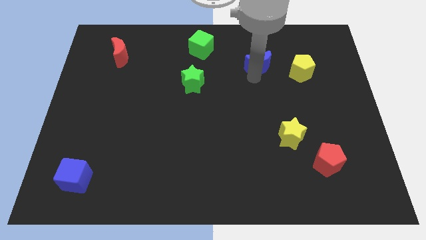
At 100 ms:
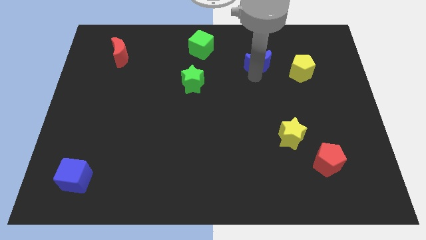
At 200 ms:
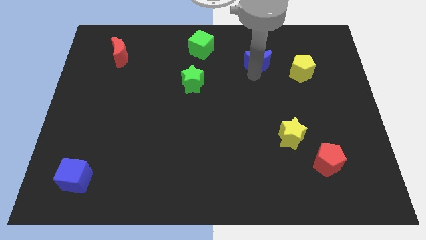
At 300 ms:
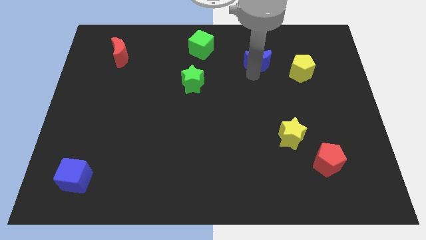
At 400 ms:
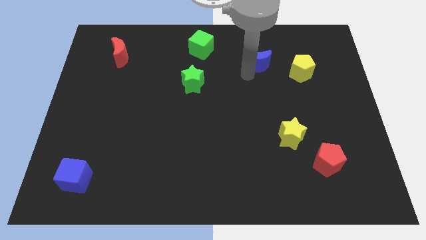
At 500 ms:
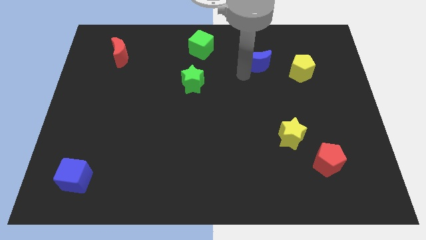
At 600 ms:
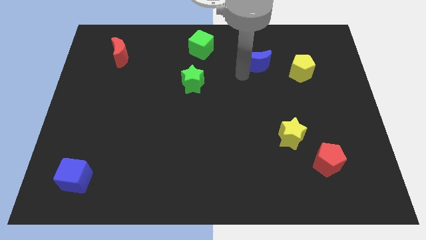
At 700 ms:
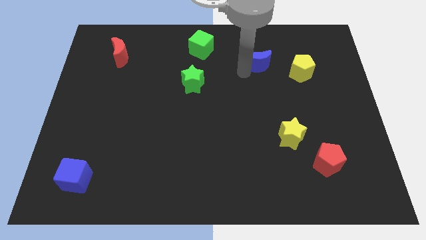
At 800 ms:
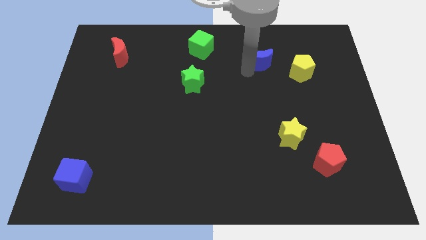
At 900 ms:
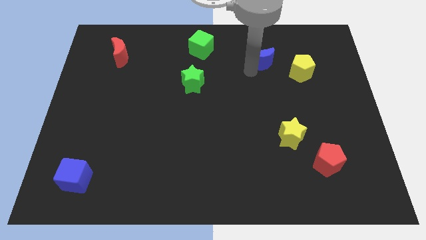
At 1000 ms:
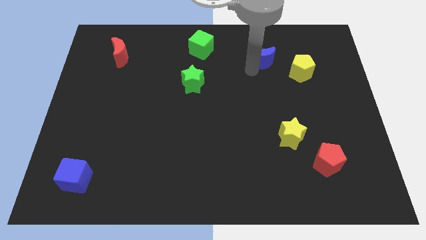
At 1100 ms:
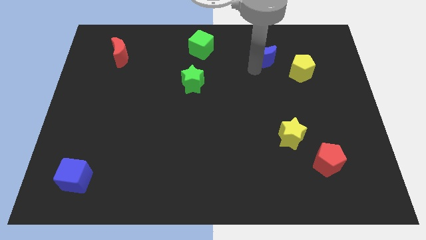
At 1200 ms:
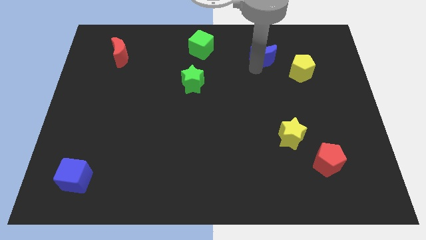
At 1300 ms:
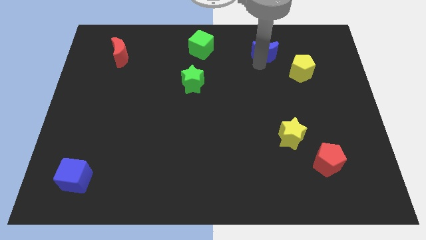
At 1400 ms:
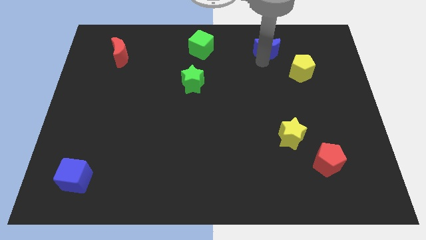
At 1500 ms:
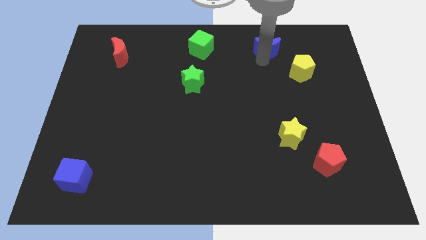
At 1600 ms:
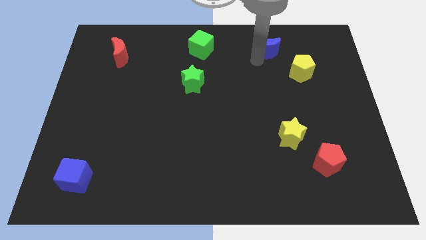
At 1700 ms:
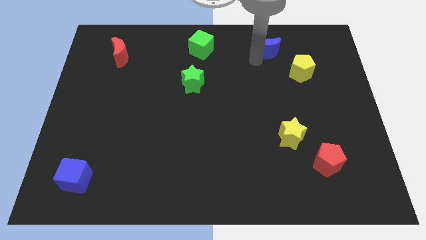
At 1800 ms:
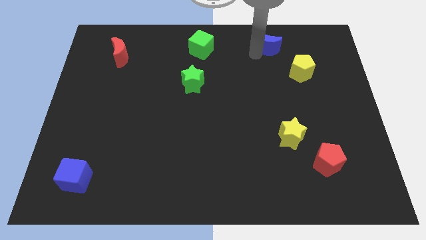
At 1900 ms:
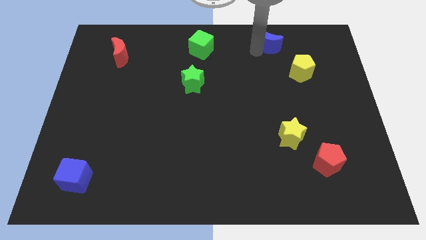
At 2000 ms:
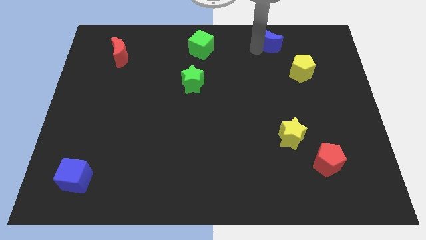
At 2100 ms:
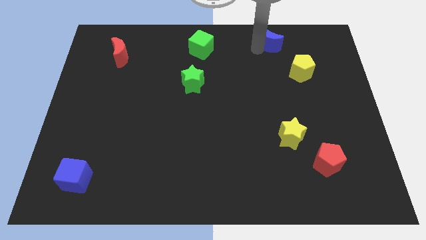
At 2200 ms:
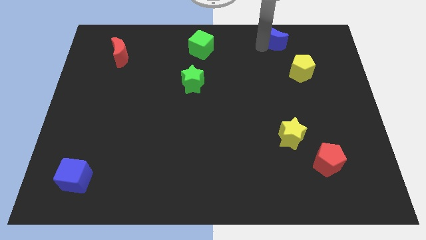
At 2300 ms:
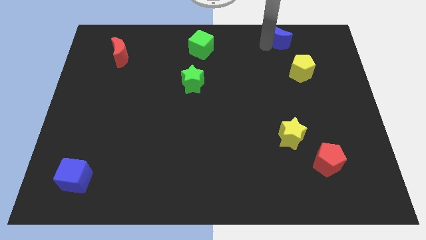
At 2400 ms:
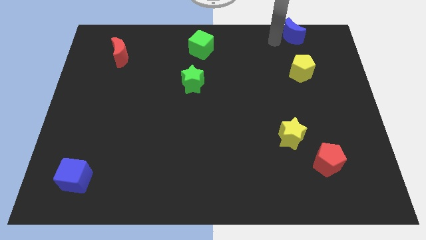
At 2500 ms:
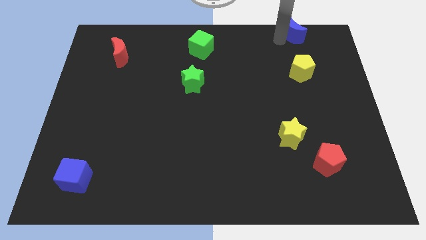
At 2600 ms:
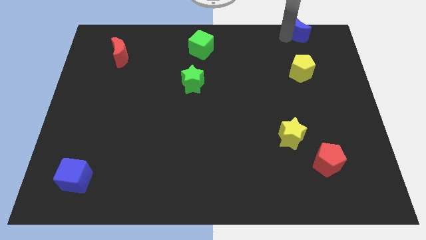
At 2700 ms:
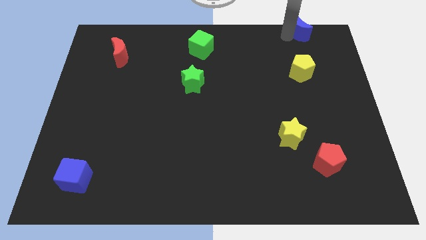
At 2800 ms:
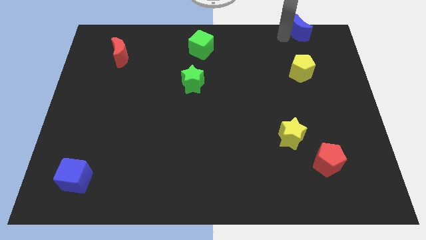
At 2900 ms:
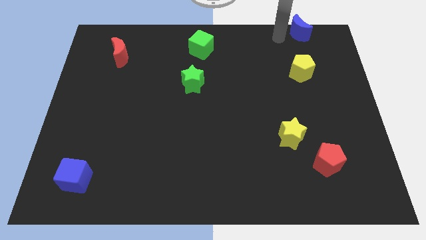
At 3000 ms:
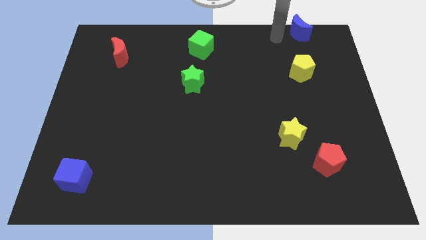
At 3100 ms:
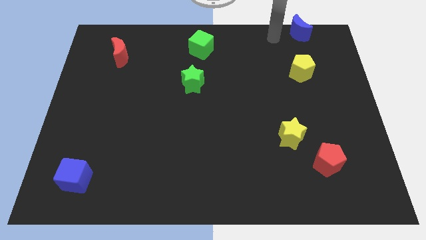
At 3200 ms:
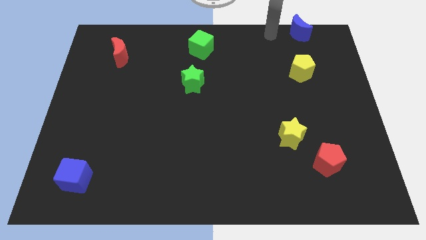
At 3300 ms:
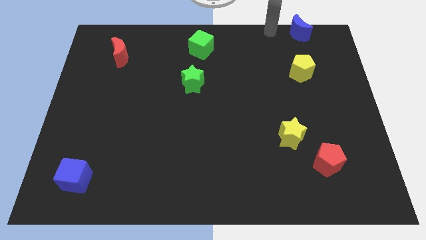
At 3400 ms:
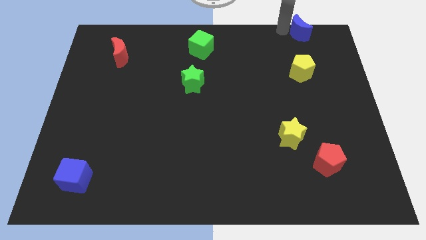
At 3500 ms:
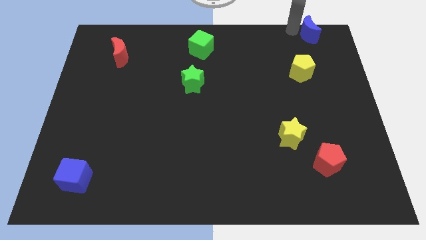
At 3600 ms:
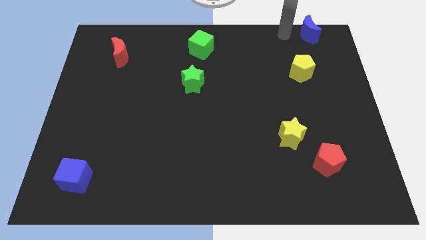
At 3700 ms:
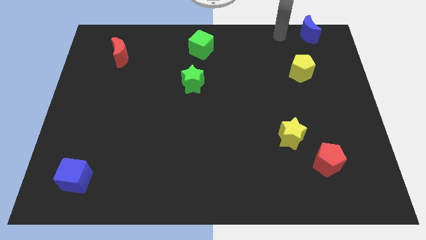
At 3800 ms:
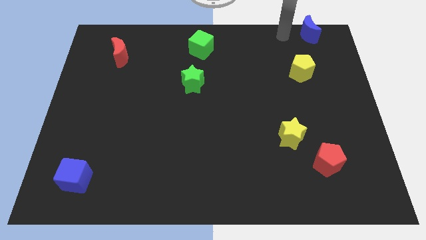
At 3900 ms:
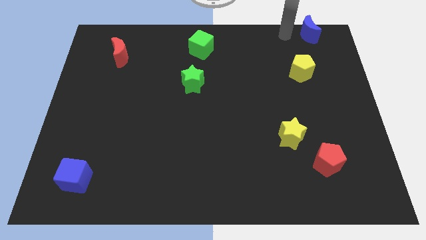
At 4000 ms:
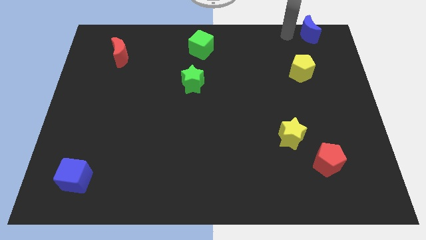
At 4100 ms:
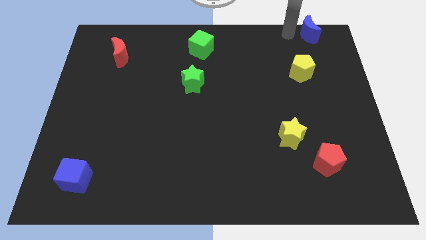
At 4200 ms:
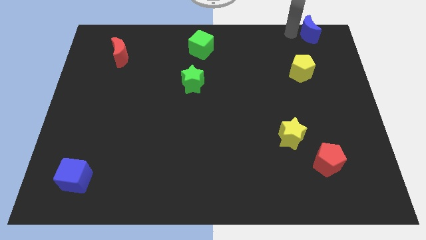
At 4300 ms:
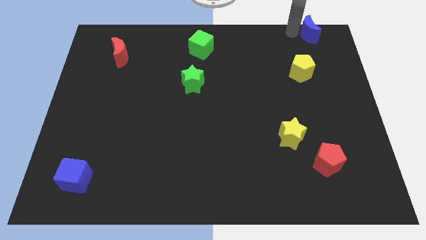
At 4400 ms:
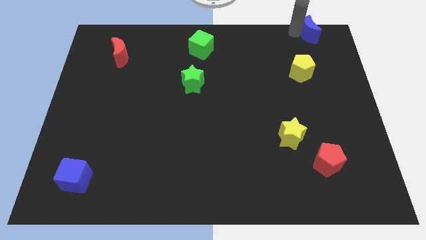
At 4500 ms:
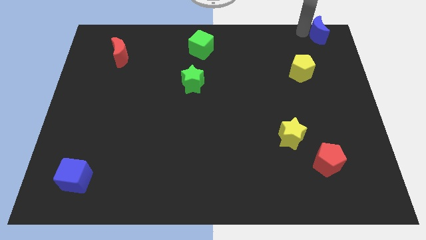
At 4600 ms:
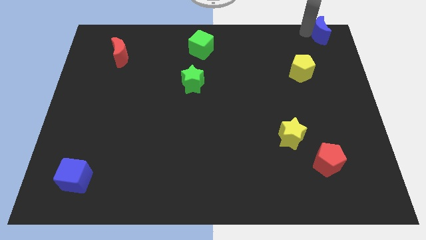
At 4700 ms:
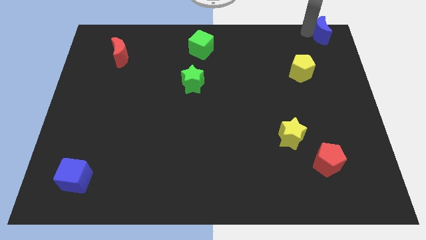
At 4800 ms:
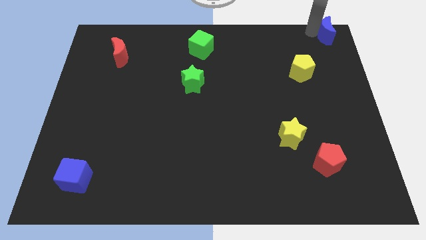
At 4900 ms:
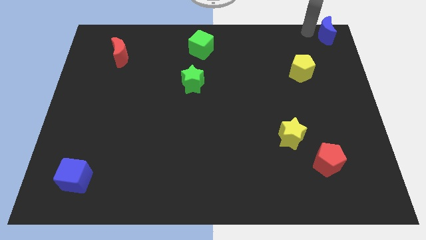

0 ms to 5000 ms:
move the blue moon to the top right corner

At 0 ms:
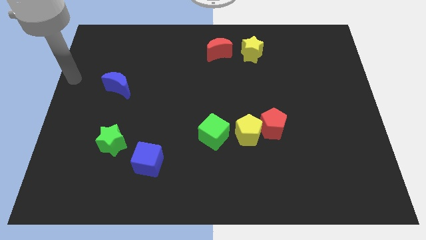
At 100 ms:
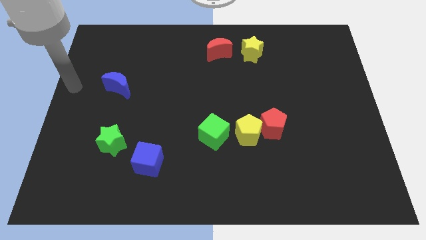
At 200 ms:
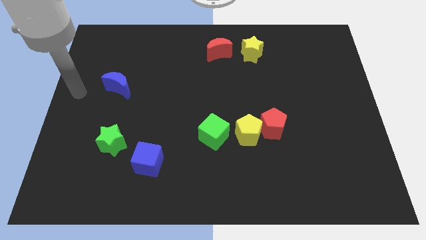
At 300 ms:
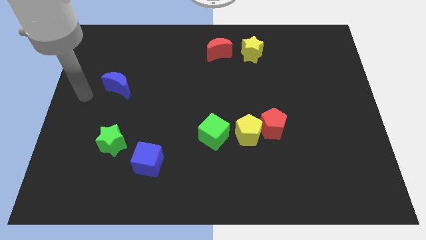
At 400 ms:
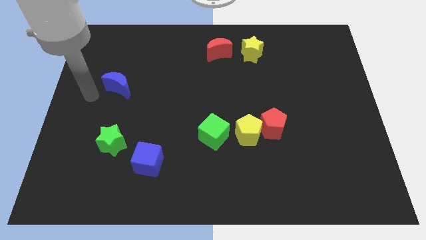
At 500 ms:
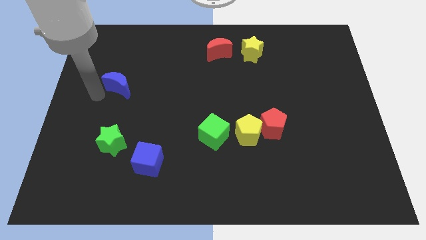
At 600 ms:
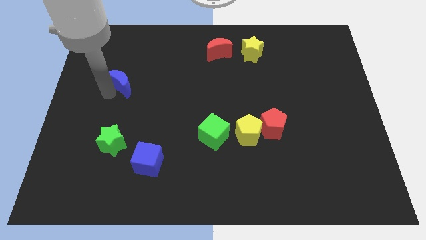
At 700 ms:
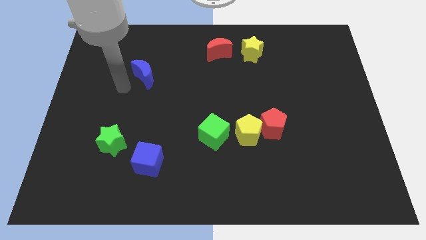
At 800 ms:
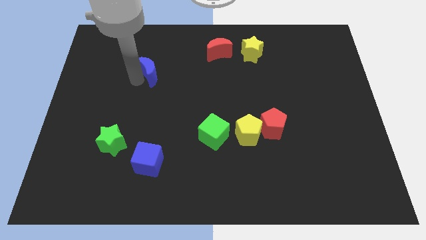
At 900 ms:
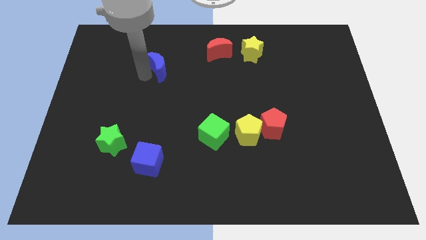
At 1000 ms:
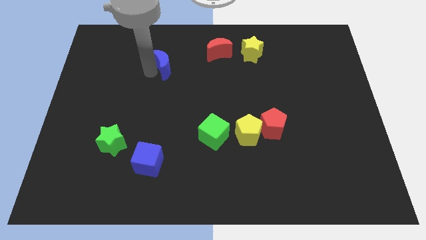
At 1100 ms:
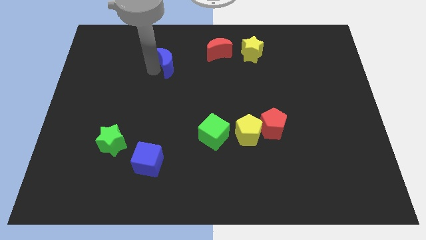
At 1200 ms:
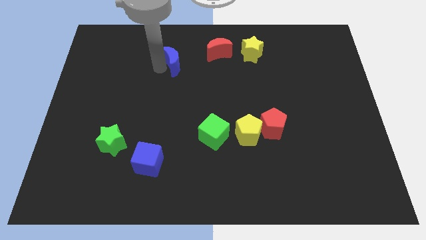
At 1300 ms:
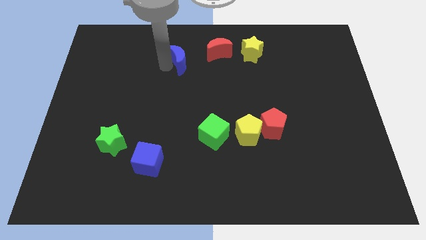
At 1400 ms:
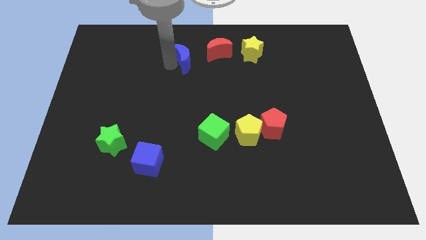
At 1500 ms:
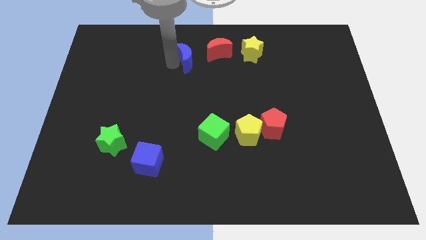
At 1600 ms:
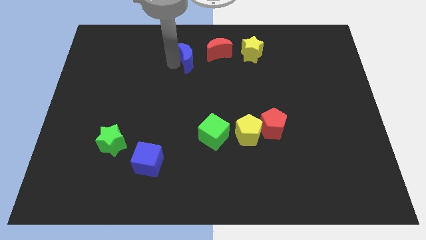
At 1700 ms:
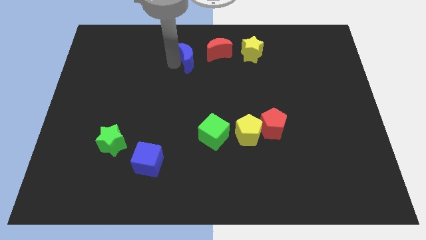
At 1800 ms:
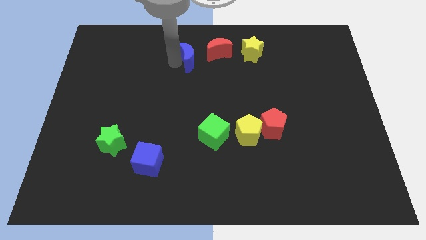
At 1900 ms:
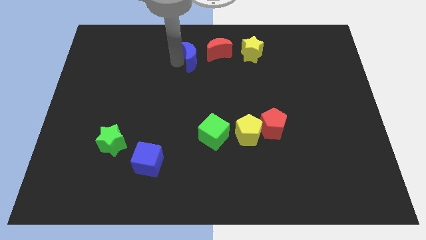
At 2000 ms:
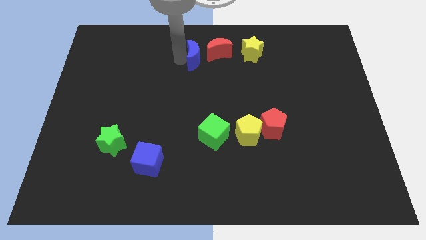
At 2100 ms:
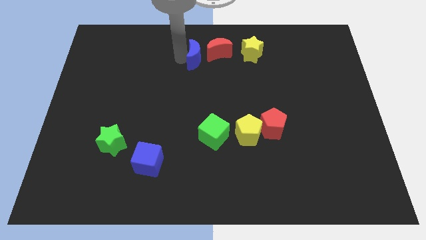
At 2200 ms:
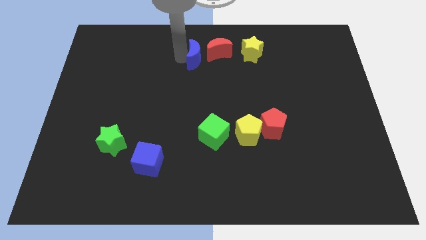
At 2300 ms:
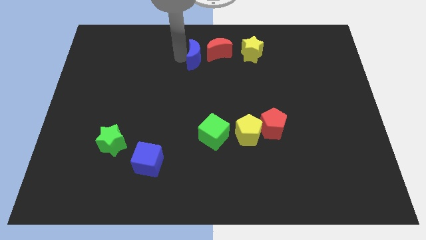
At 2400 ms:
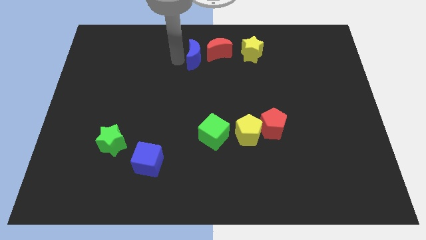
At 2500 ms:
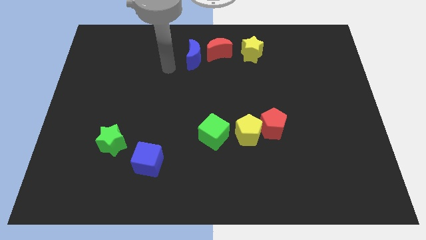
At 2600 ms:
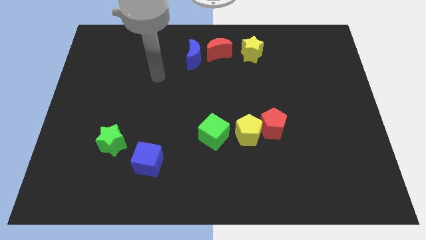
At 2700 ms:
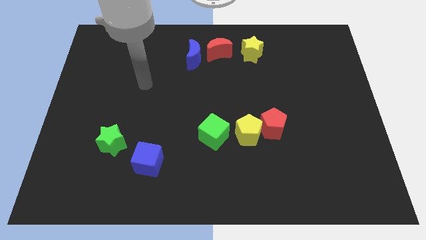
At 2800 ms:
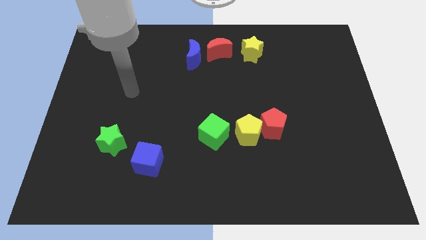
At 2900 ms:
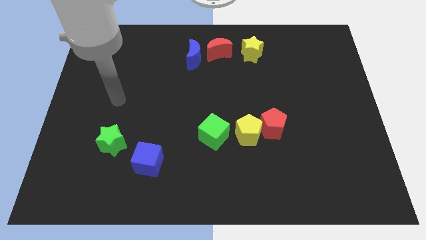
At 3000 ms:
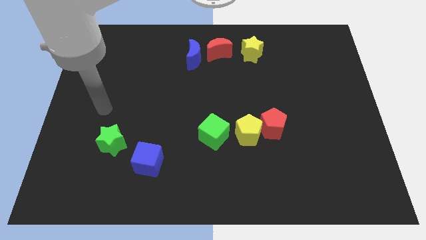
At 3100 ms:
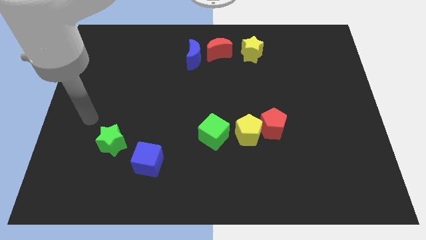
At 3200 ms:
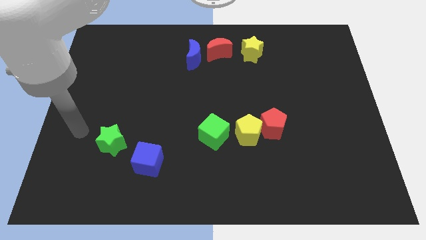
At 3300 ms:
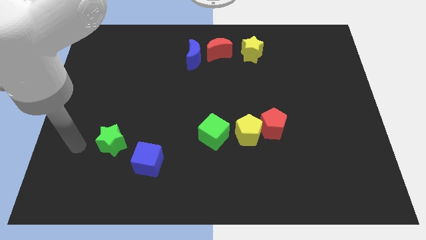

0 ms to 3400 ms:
slide the blue moon to the left of red moon

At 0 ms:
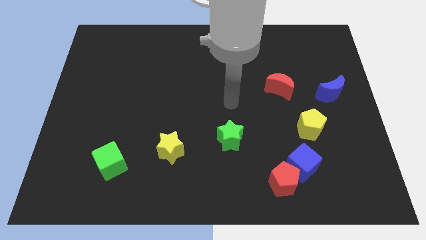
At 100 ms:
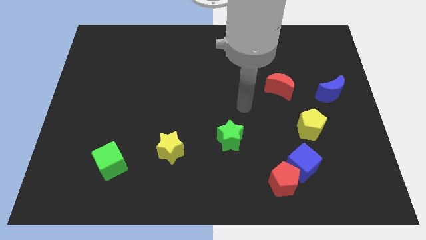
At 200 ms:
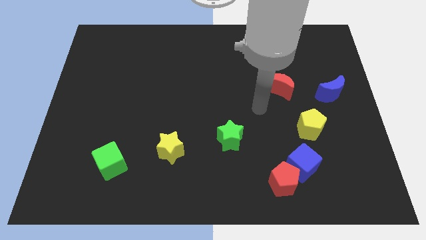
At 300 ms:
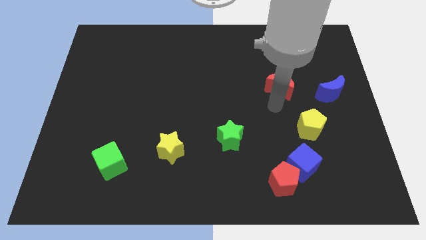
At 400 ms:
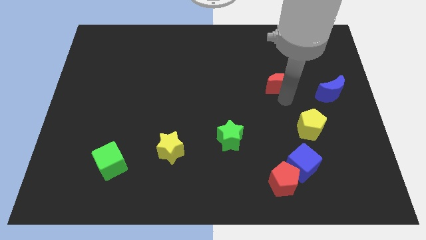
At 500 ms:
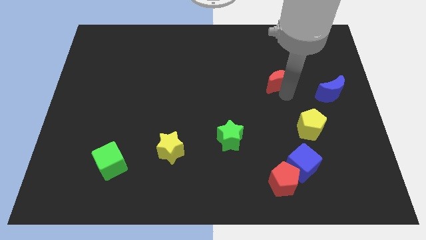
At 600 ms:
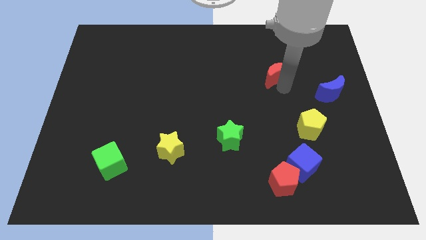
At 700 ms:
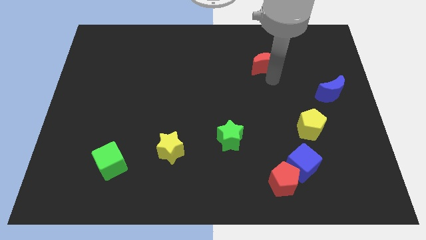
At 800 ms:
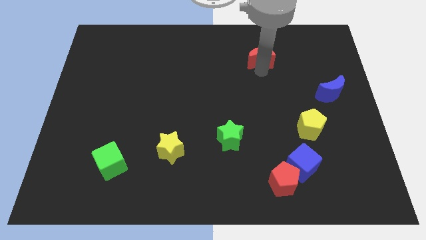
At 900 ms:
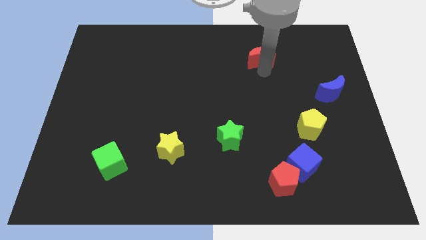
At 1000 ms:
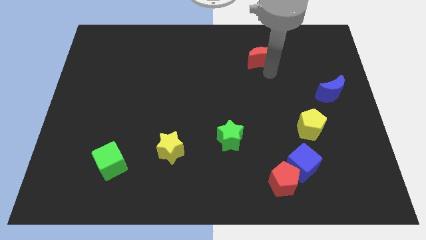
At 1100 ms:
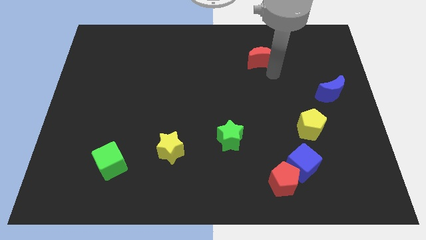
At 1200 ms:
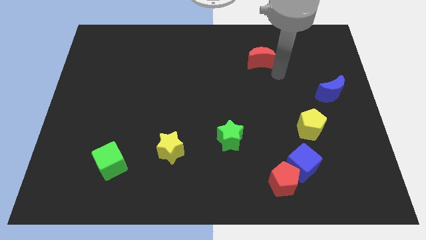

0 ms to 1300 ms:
push the red crescent slightly to the top
